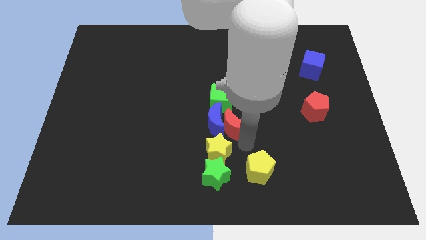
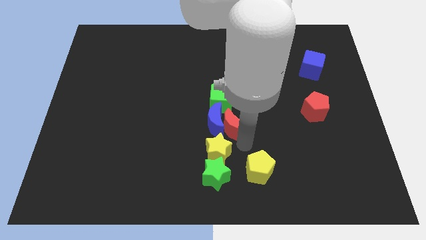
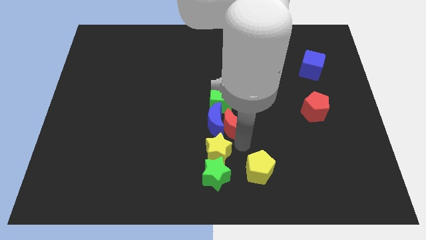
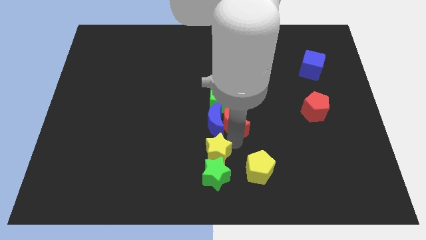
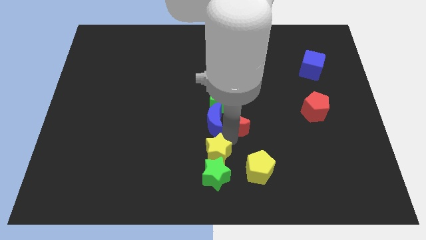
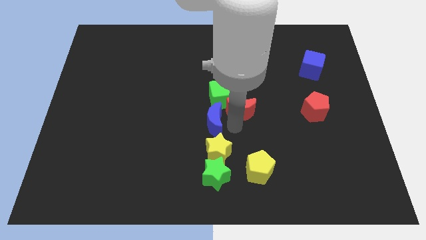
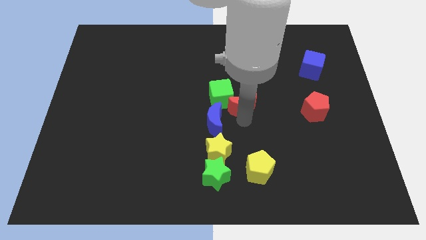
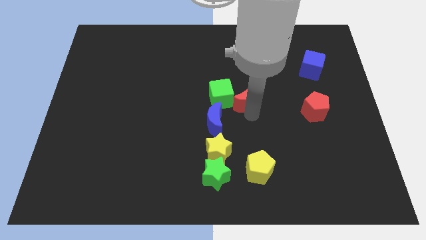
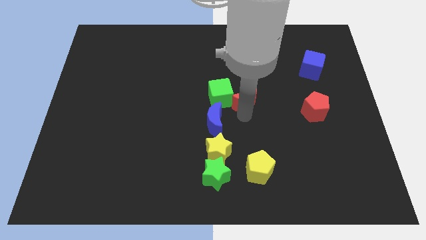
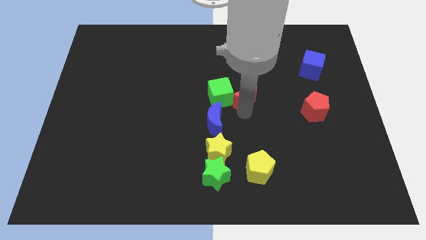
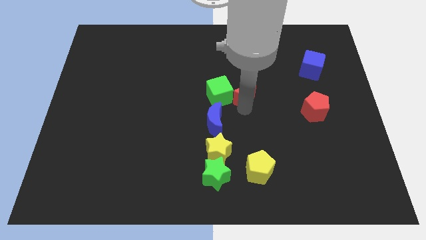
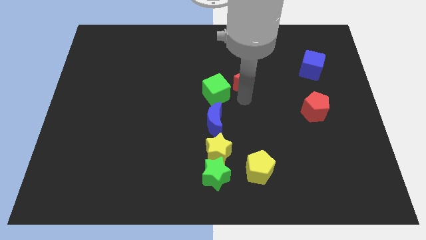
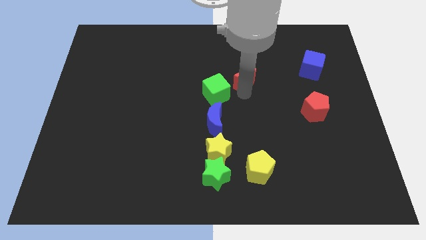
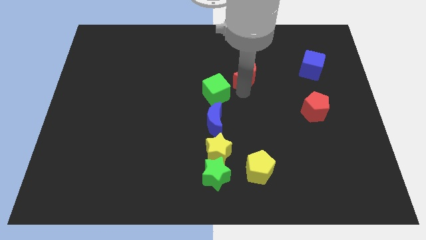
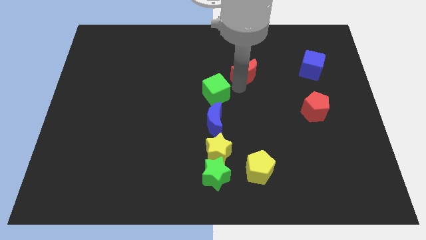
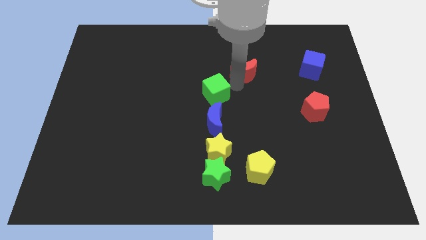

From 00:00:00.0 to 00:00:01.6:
separate the red crescent from the blue crescent

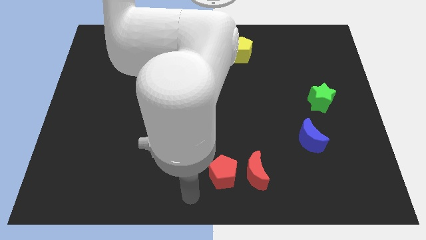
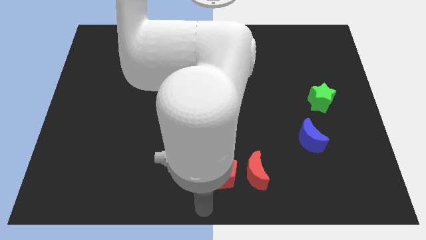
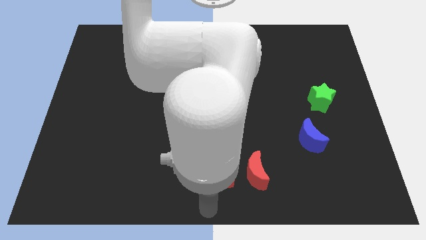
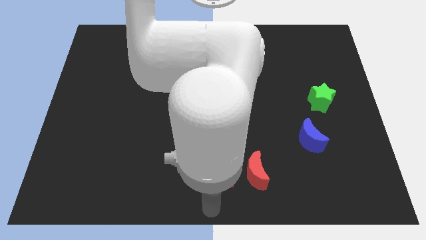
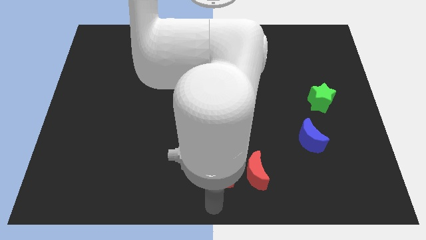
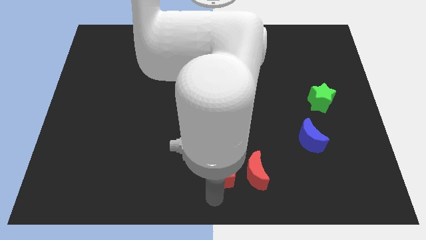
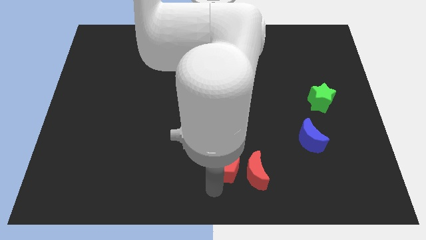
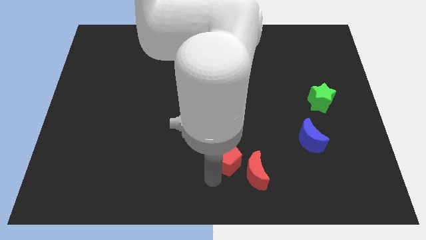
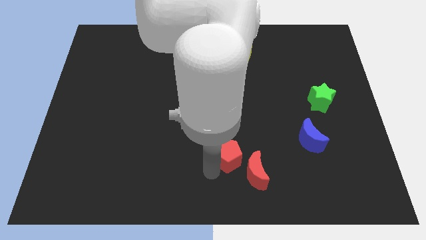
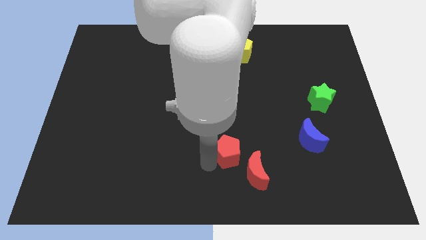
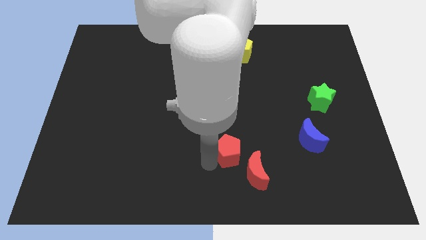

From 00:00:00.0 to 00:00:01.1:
slide red pentagon to the top left of red moon

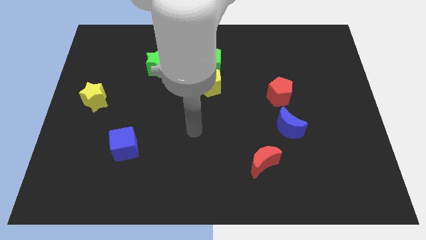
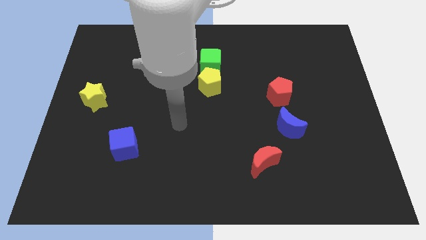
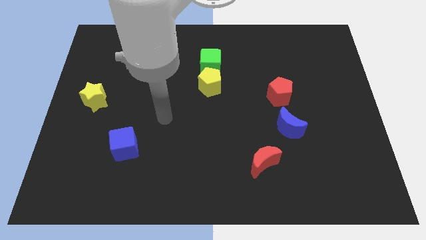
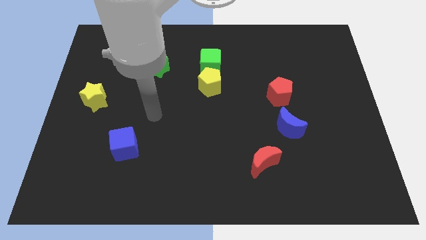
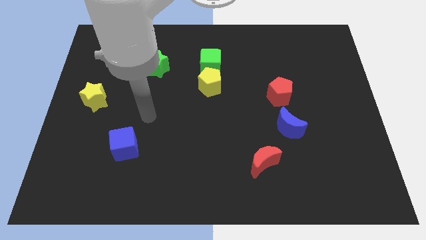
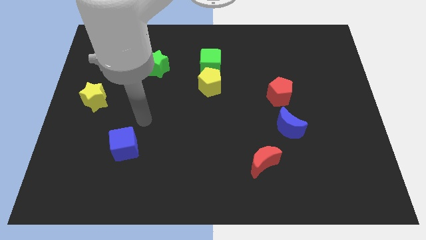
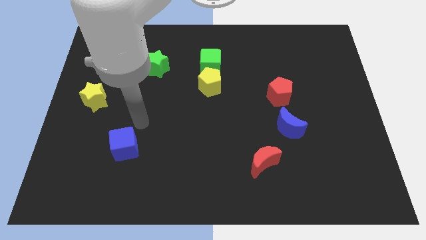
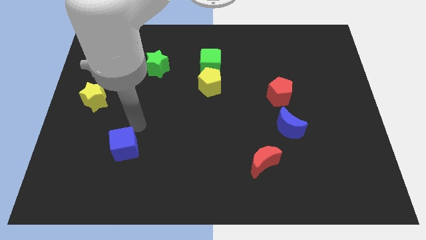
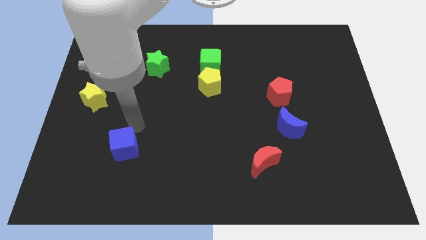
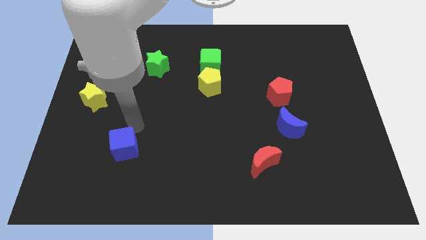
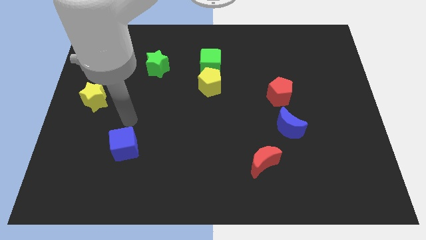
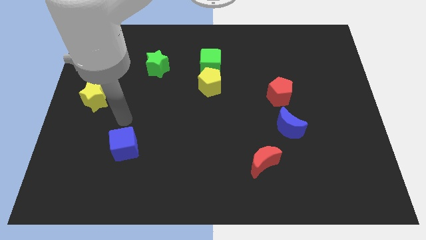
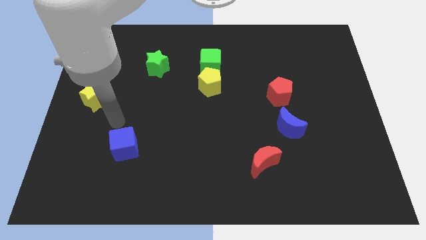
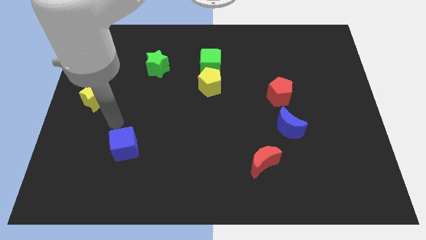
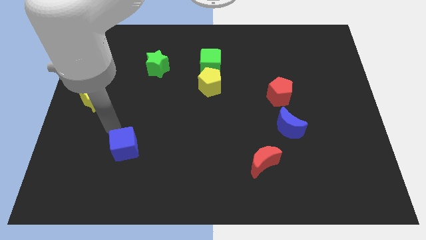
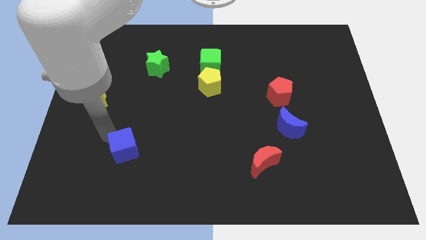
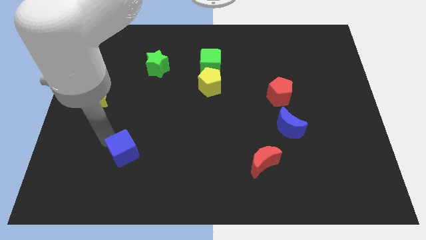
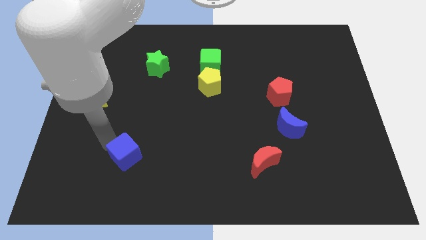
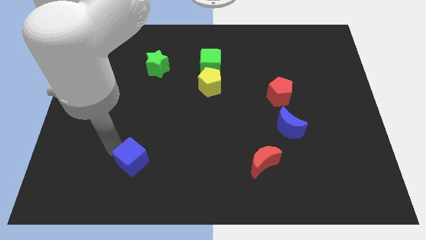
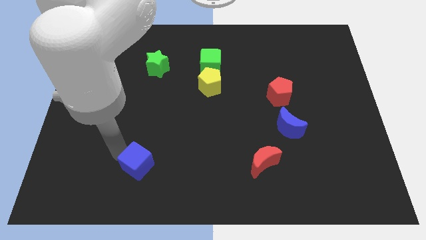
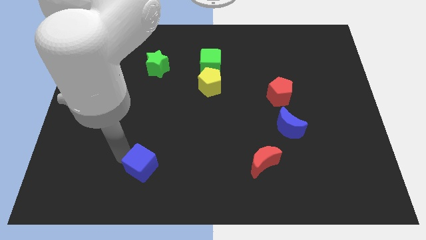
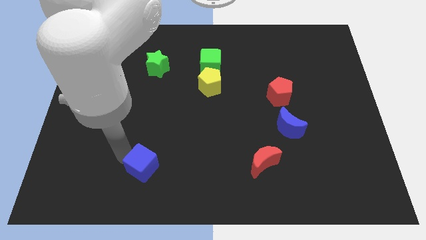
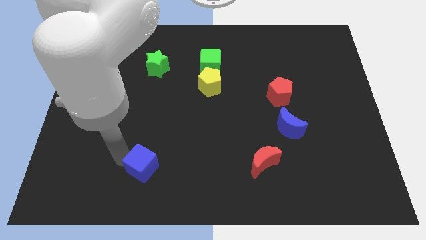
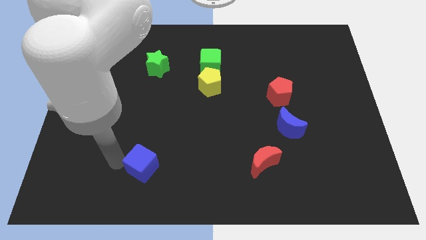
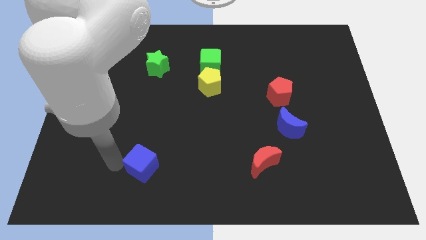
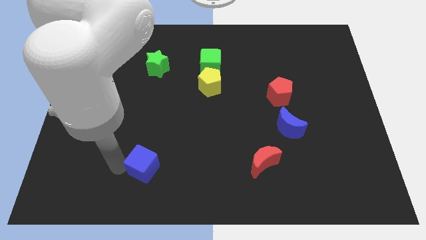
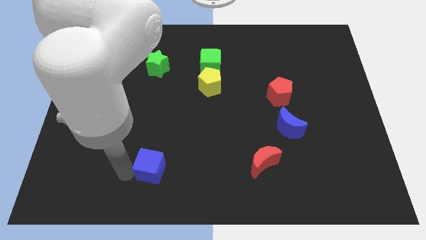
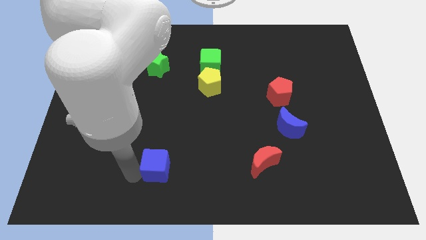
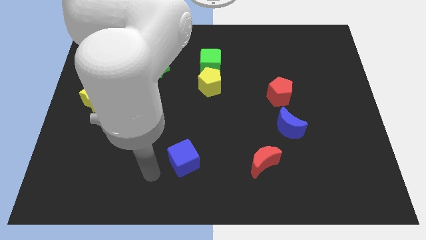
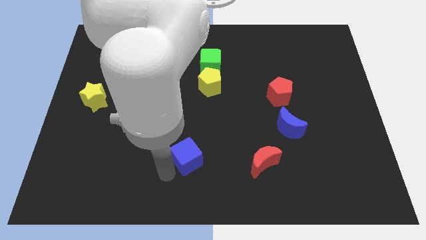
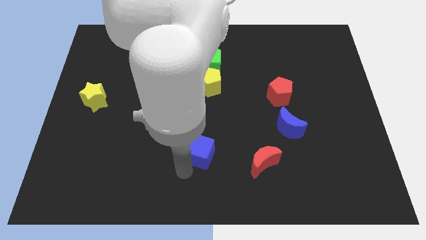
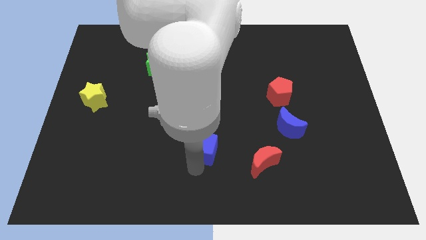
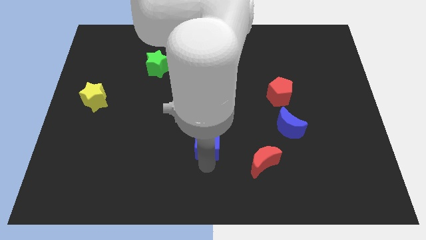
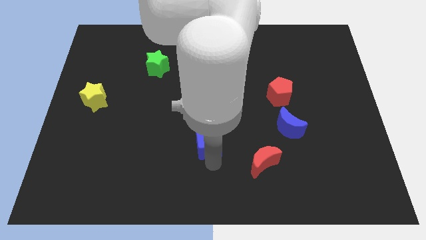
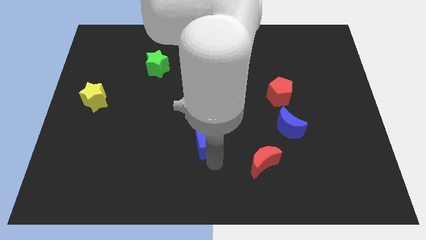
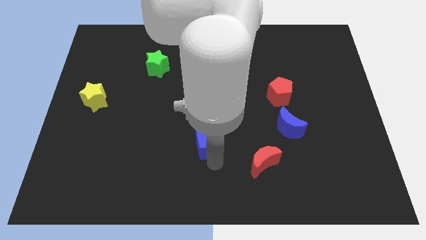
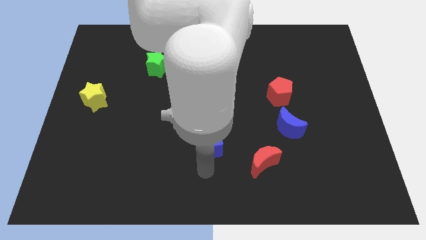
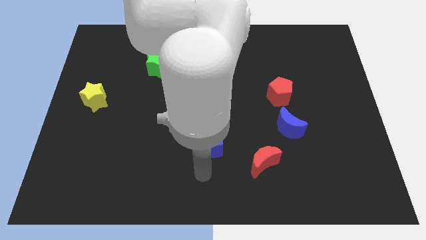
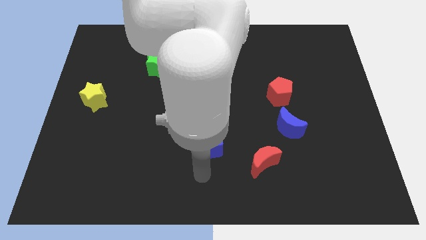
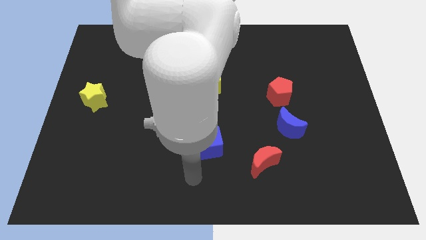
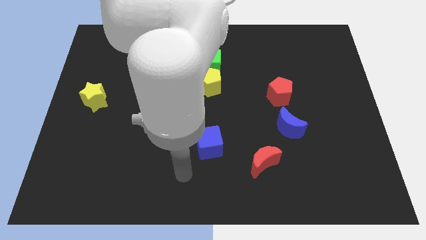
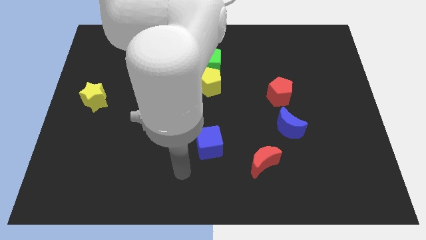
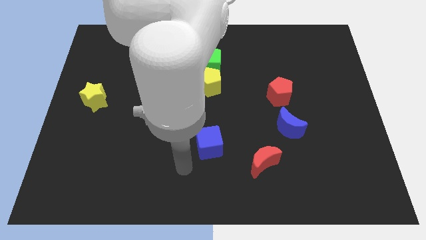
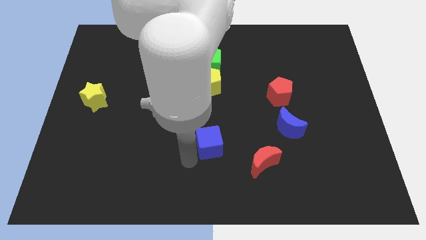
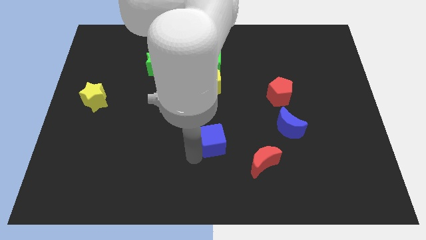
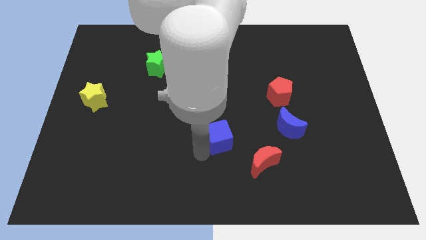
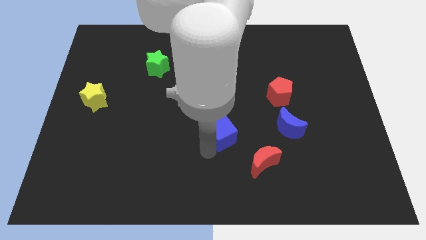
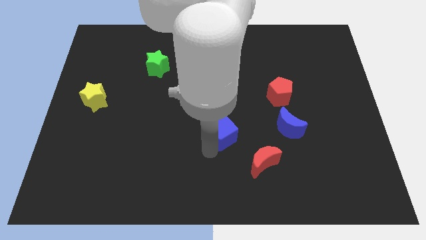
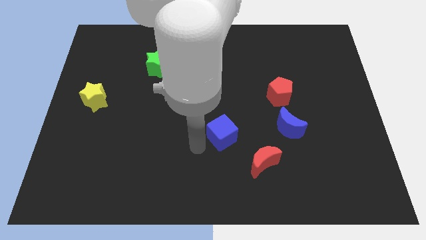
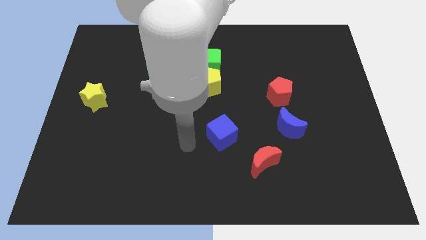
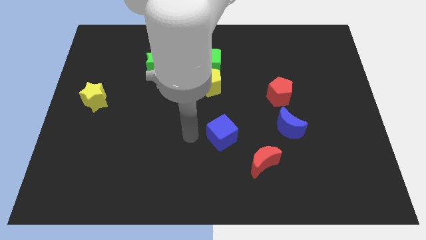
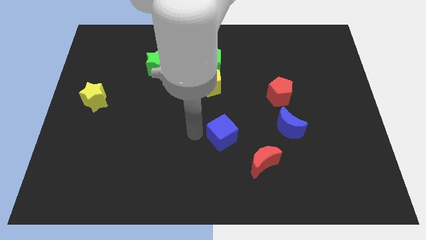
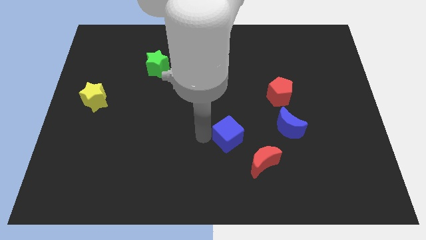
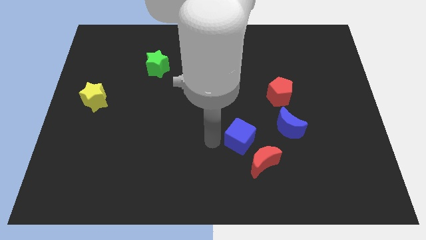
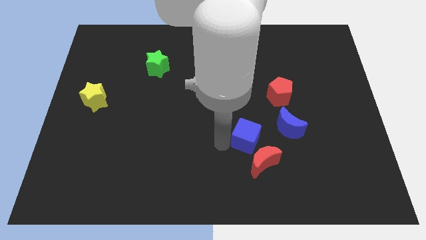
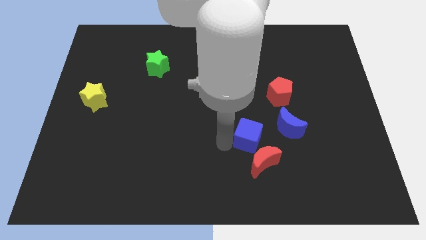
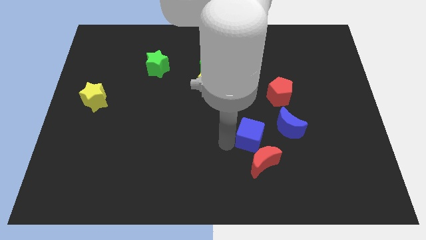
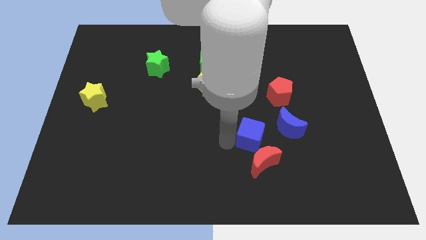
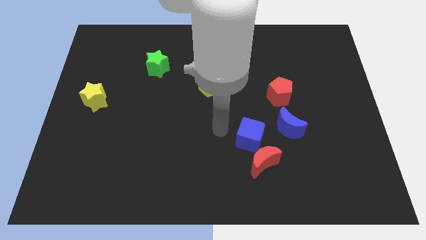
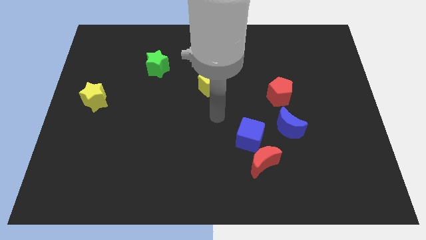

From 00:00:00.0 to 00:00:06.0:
move the blue cube to the top left of the red crescent
